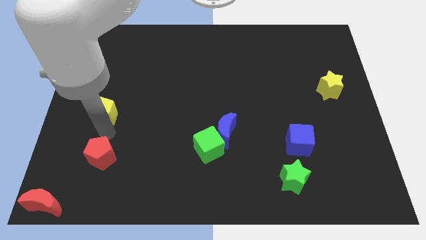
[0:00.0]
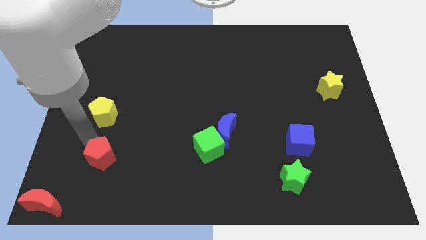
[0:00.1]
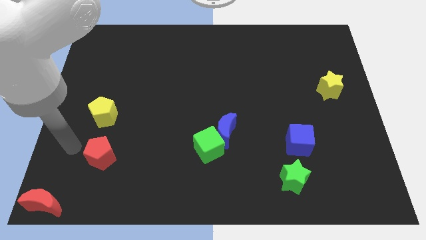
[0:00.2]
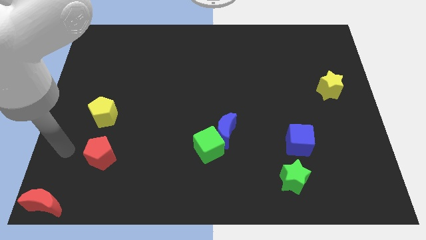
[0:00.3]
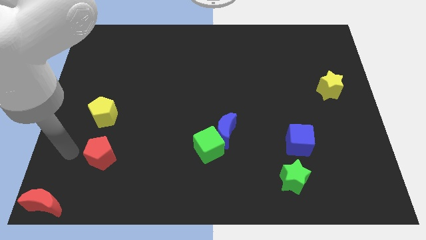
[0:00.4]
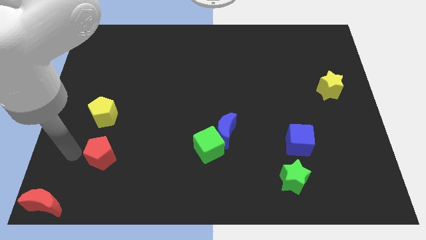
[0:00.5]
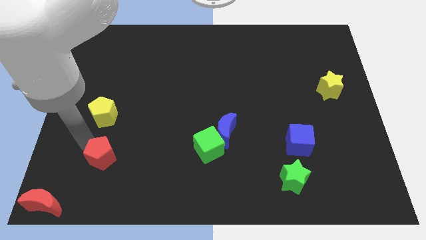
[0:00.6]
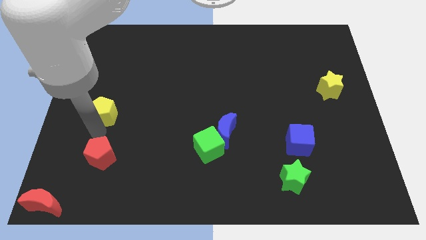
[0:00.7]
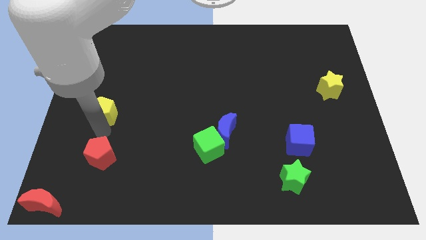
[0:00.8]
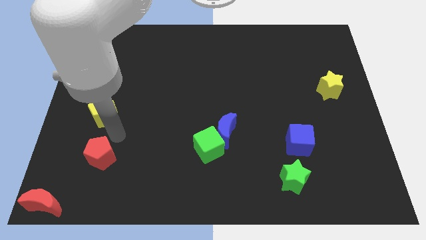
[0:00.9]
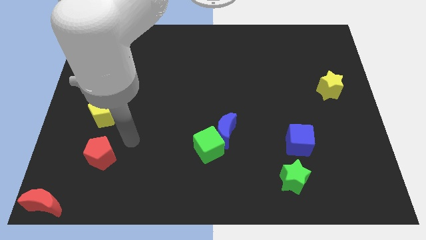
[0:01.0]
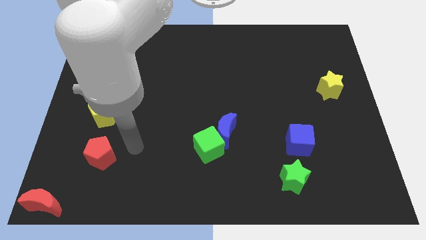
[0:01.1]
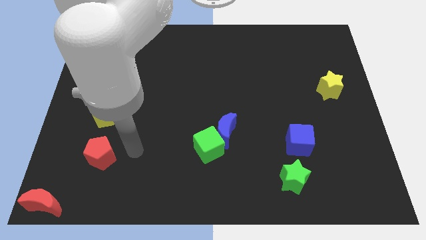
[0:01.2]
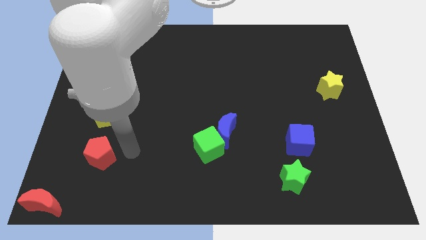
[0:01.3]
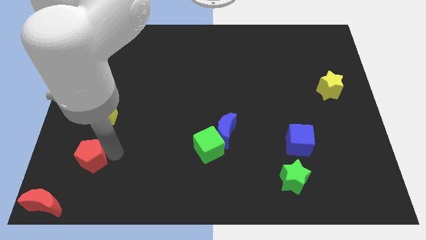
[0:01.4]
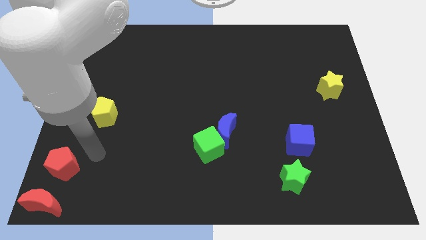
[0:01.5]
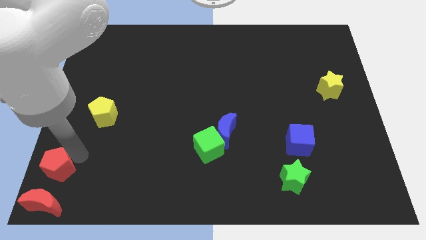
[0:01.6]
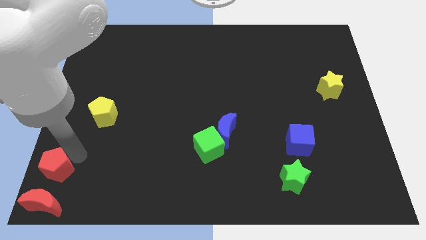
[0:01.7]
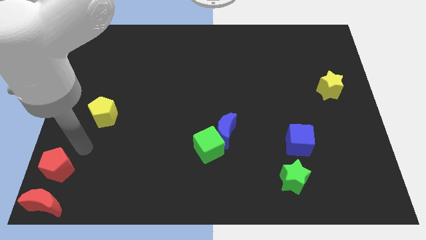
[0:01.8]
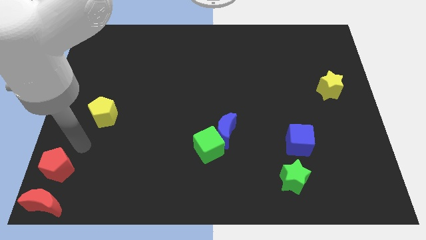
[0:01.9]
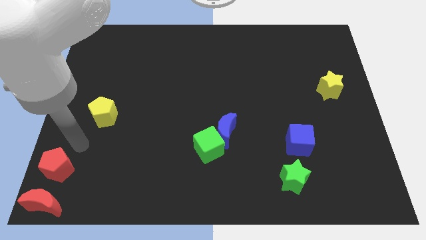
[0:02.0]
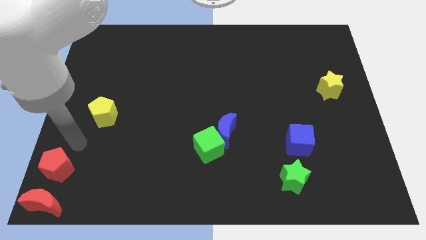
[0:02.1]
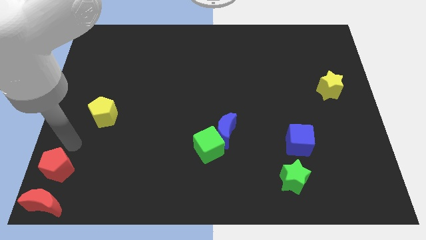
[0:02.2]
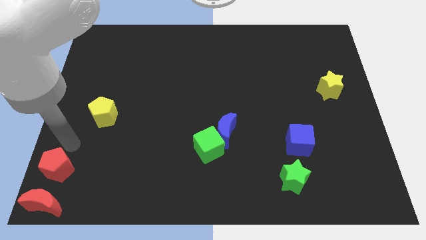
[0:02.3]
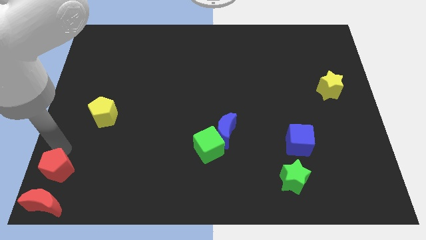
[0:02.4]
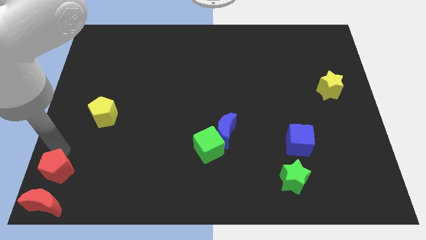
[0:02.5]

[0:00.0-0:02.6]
place the red pentagon in between the yellow pentagon and red moon

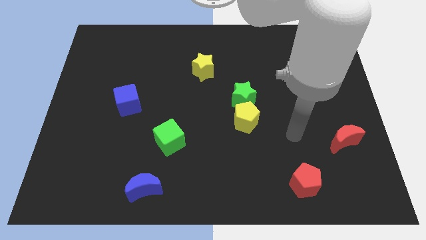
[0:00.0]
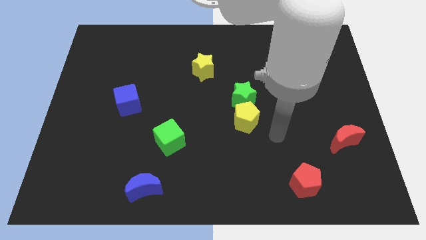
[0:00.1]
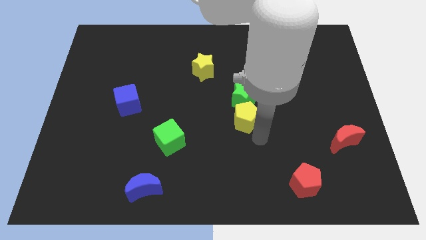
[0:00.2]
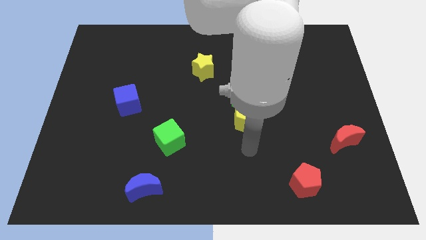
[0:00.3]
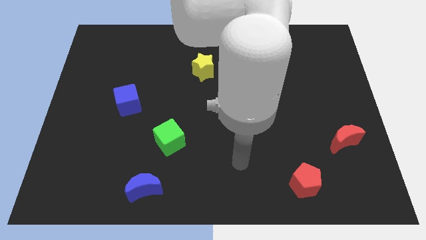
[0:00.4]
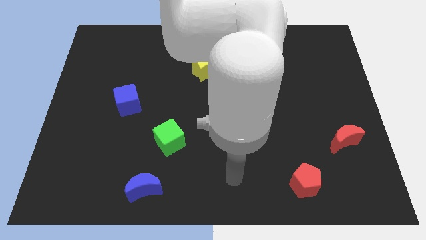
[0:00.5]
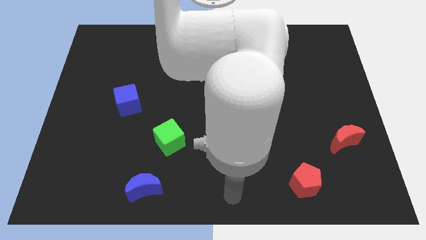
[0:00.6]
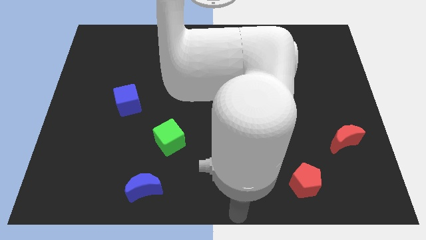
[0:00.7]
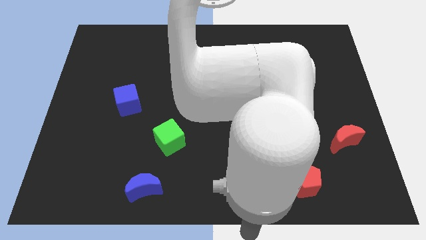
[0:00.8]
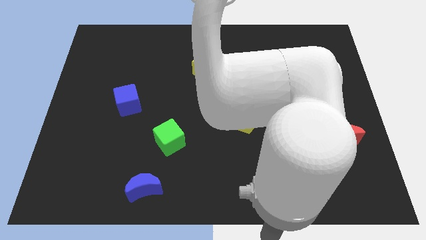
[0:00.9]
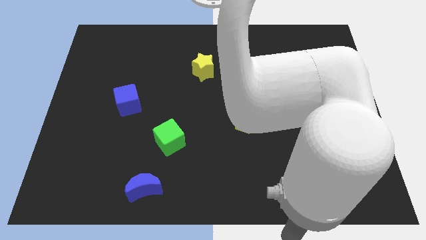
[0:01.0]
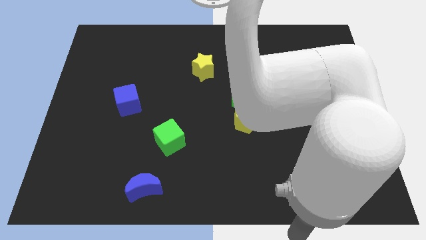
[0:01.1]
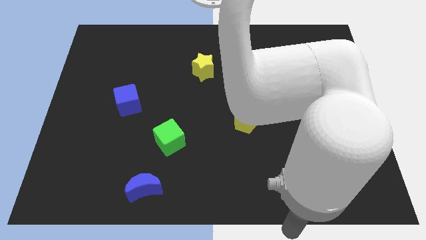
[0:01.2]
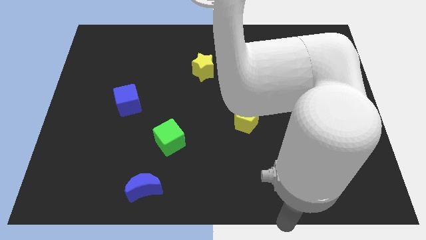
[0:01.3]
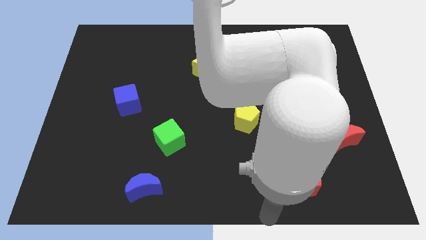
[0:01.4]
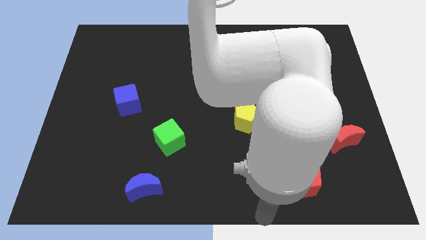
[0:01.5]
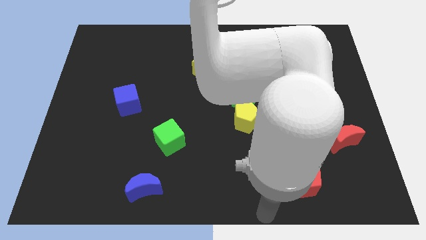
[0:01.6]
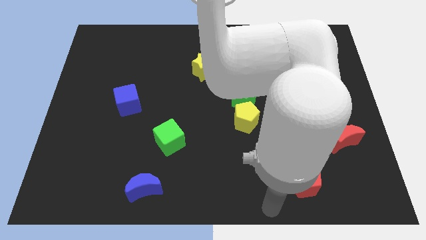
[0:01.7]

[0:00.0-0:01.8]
move your arm away from the red moon

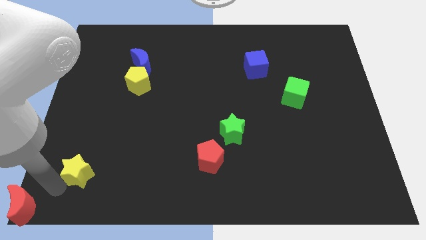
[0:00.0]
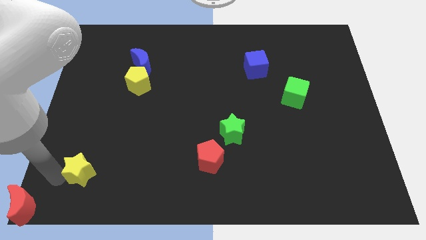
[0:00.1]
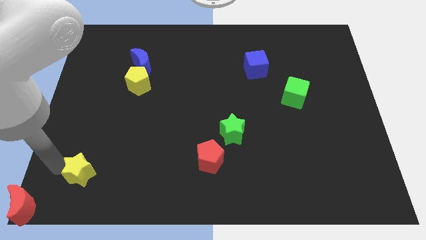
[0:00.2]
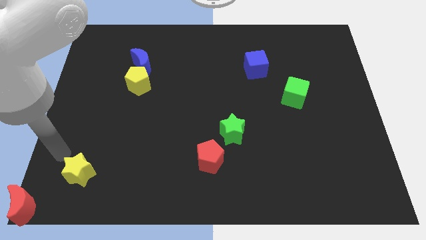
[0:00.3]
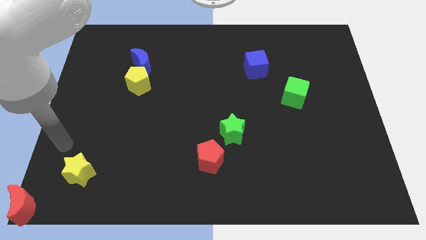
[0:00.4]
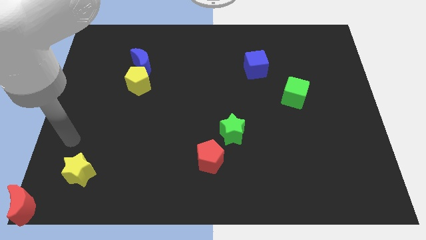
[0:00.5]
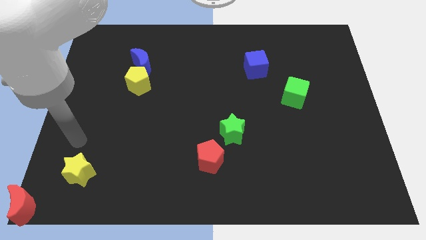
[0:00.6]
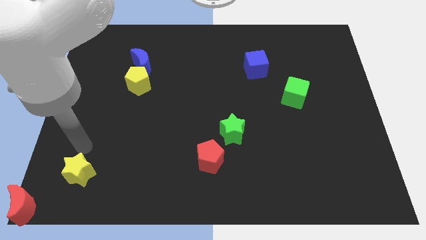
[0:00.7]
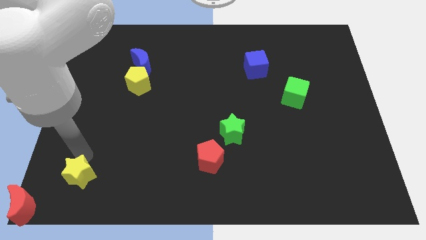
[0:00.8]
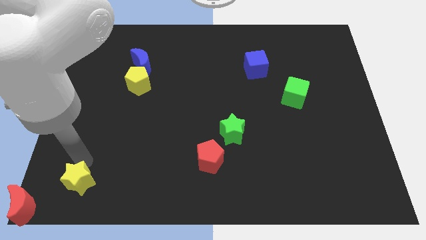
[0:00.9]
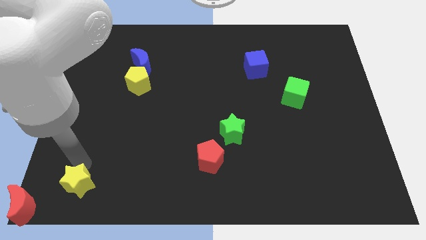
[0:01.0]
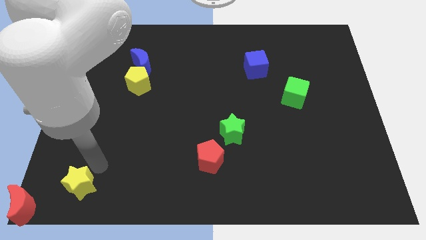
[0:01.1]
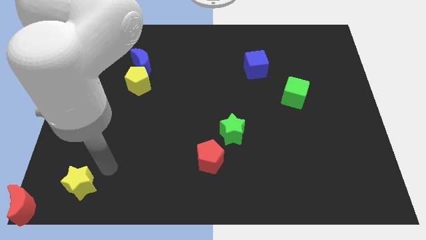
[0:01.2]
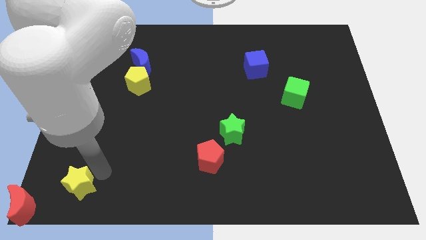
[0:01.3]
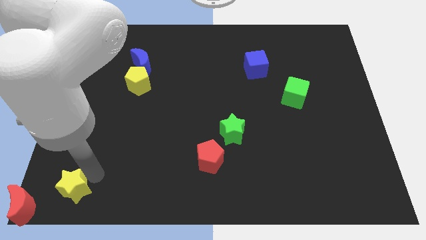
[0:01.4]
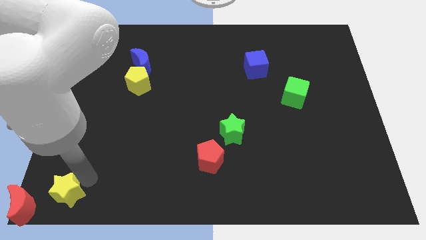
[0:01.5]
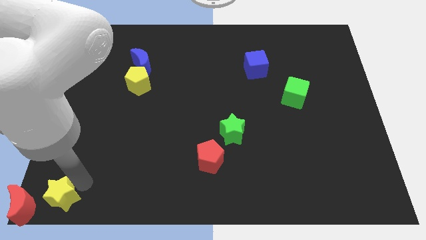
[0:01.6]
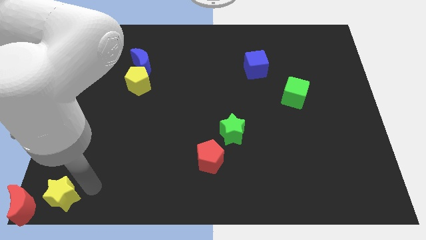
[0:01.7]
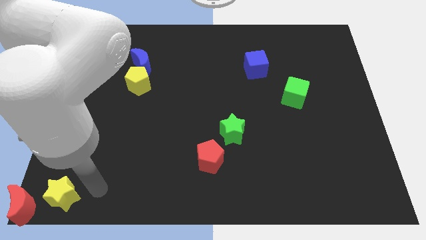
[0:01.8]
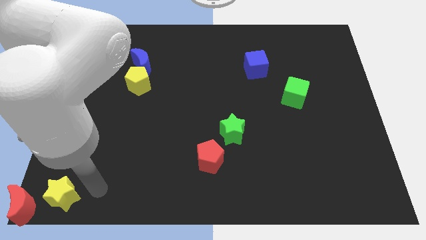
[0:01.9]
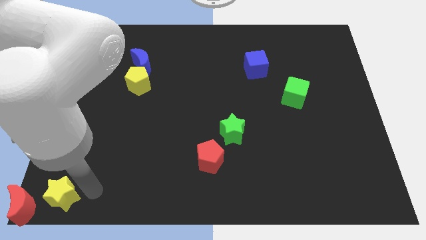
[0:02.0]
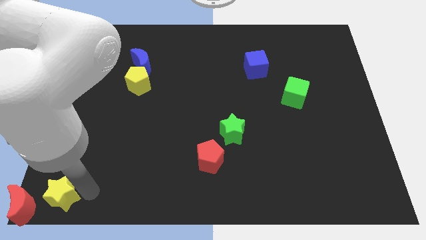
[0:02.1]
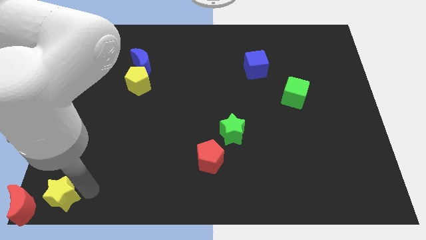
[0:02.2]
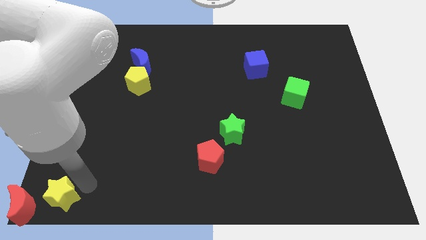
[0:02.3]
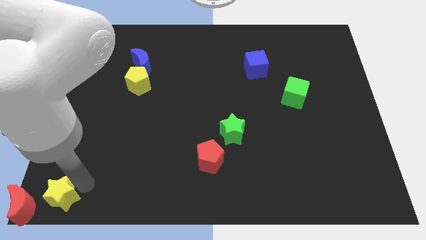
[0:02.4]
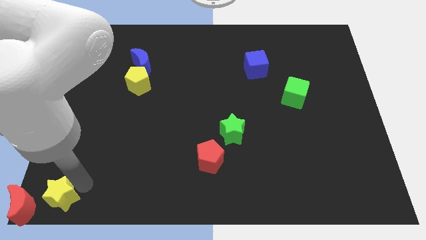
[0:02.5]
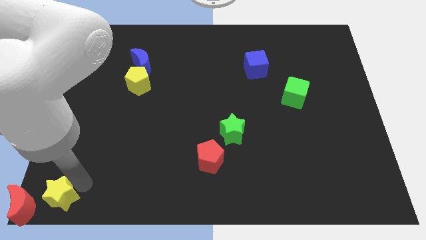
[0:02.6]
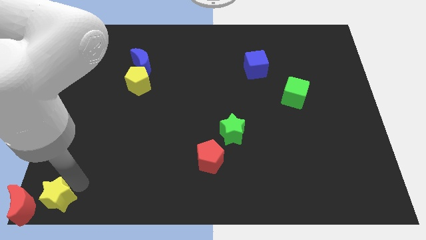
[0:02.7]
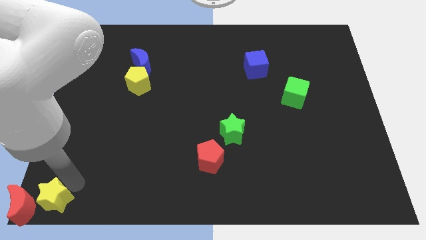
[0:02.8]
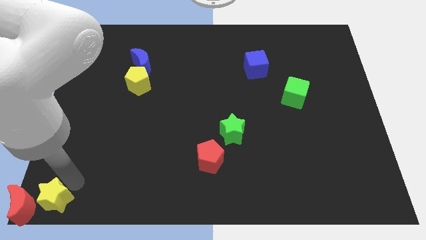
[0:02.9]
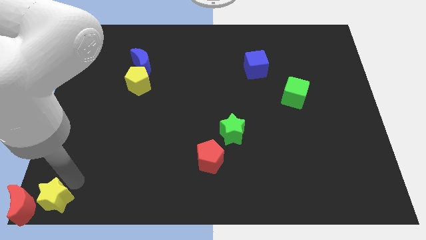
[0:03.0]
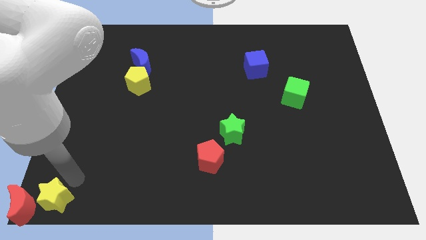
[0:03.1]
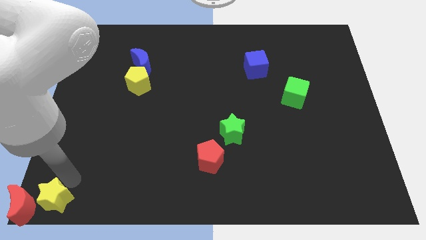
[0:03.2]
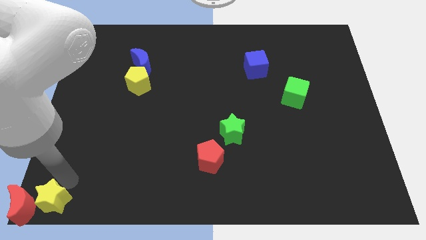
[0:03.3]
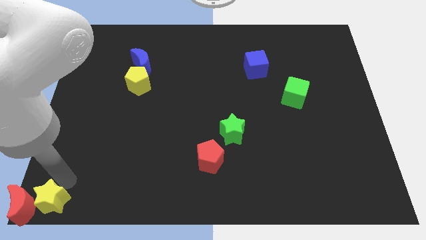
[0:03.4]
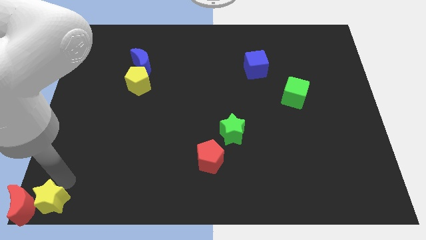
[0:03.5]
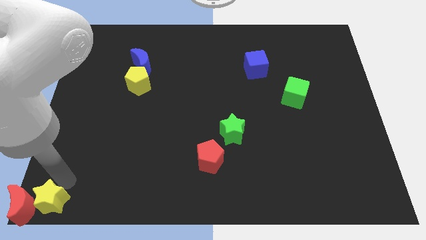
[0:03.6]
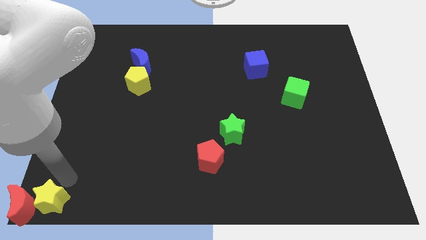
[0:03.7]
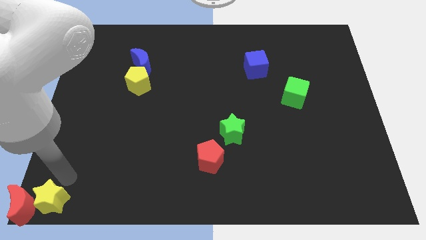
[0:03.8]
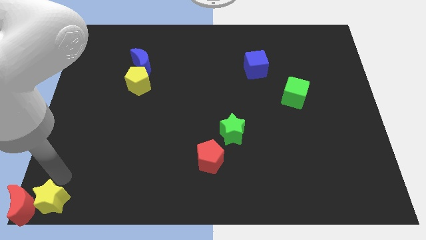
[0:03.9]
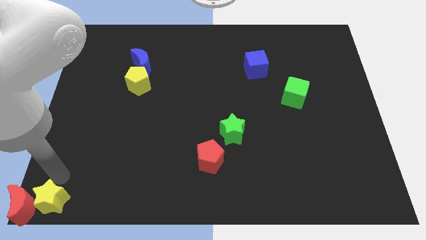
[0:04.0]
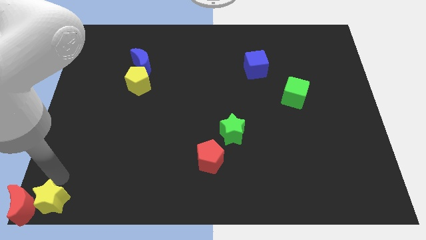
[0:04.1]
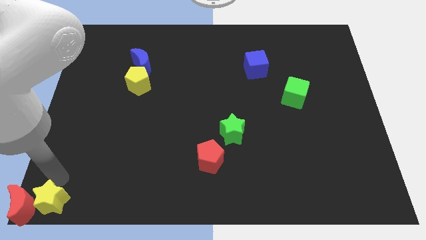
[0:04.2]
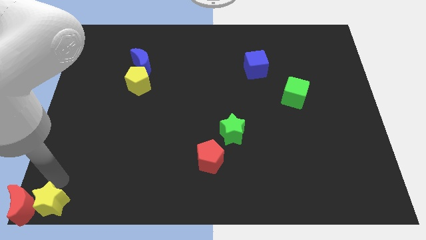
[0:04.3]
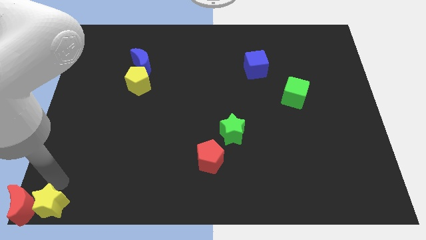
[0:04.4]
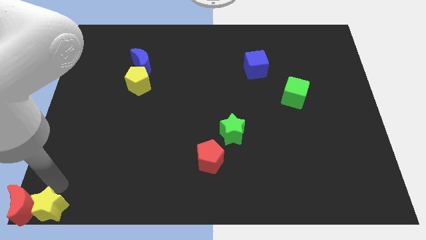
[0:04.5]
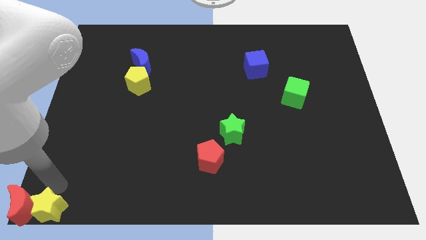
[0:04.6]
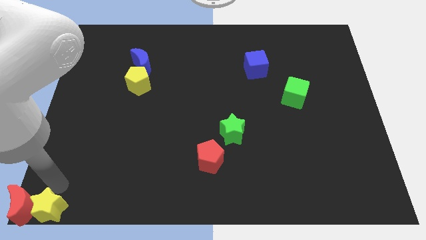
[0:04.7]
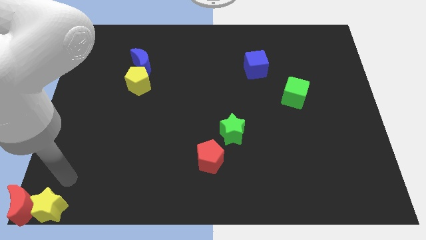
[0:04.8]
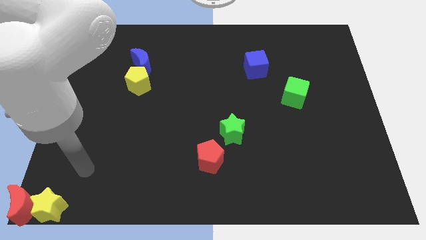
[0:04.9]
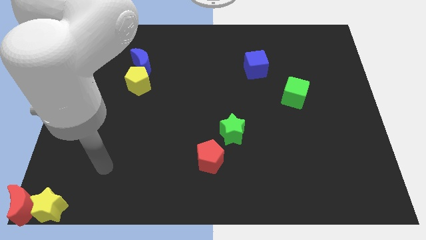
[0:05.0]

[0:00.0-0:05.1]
slide yellow star to the bottom left corner
